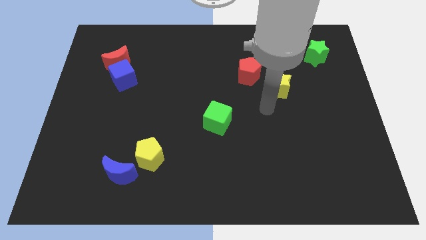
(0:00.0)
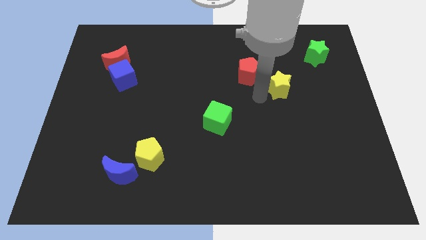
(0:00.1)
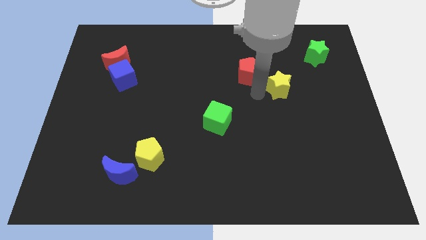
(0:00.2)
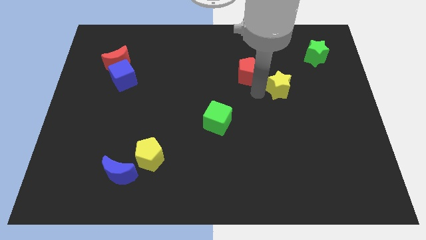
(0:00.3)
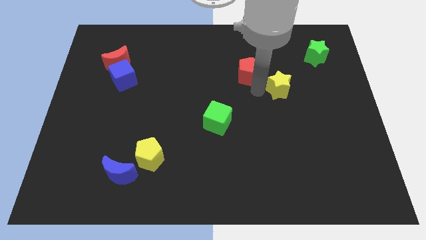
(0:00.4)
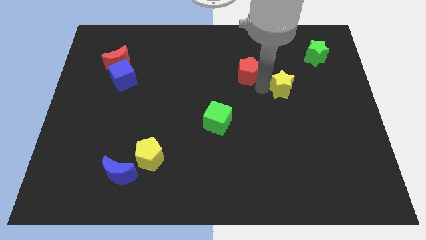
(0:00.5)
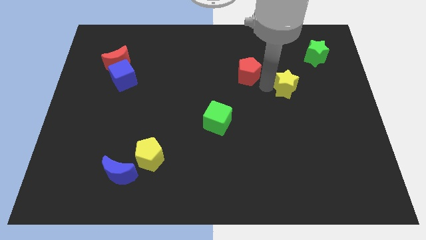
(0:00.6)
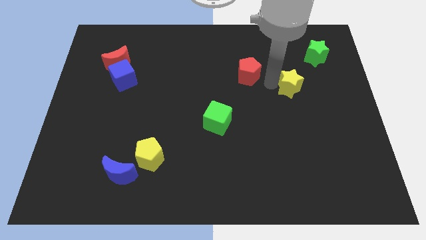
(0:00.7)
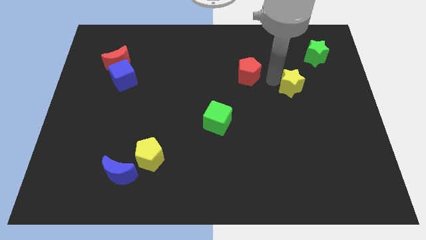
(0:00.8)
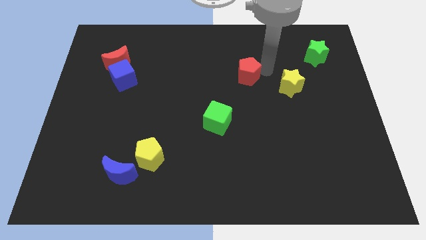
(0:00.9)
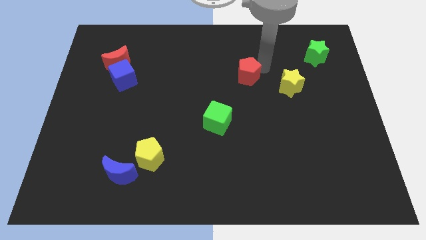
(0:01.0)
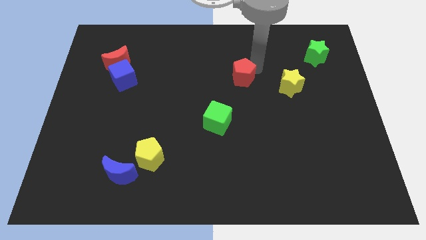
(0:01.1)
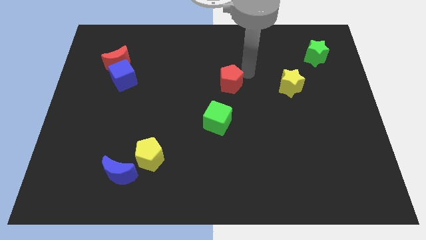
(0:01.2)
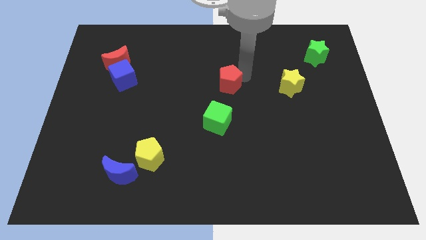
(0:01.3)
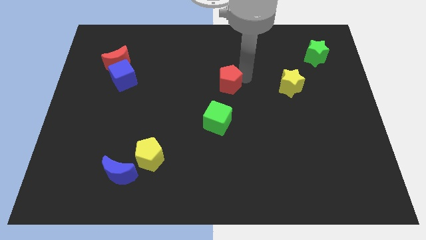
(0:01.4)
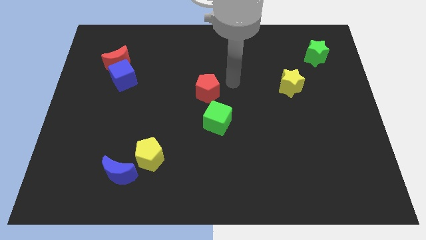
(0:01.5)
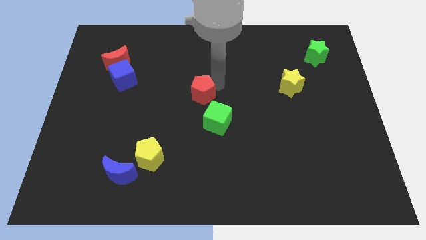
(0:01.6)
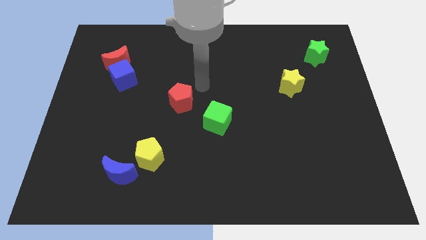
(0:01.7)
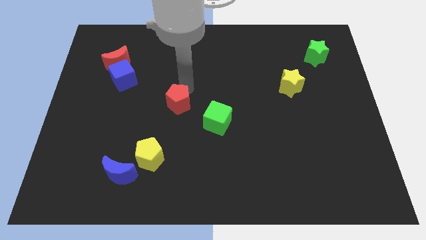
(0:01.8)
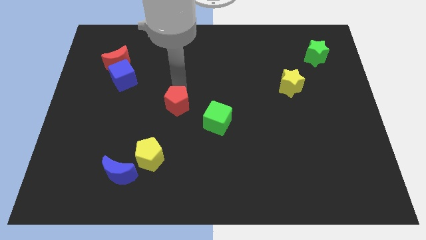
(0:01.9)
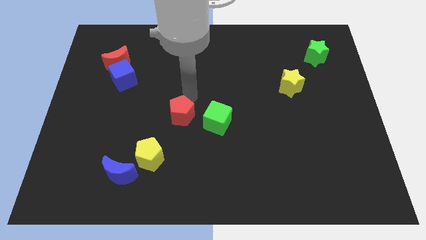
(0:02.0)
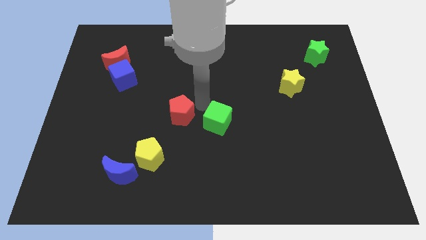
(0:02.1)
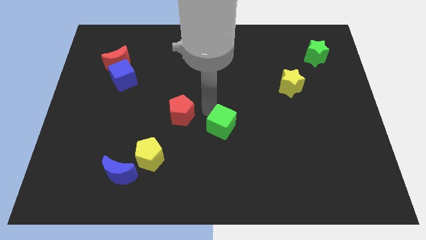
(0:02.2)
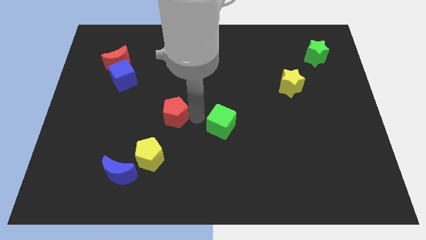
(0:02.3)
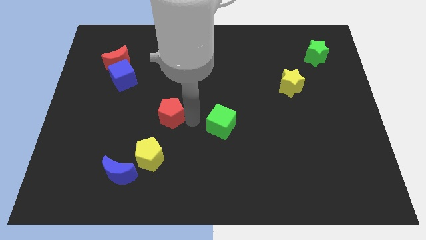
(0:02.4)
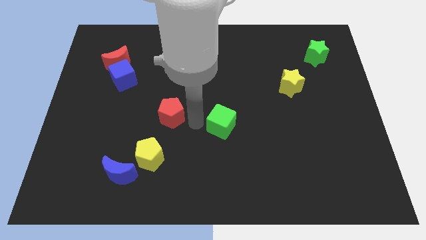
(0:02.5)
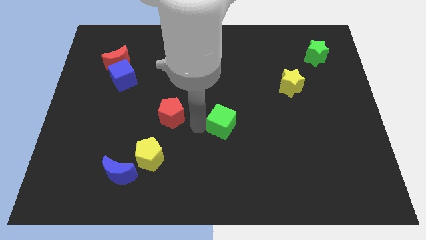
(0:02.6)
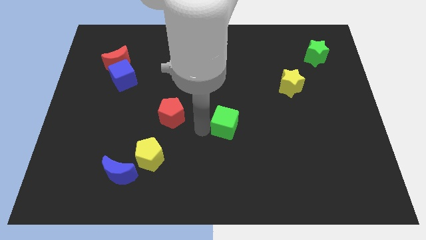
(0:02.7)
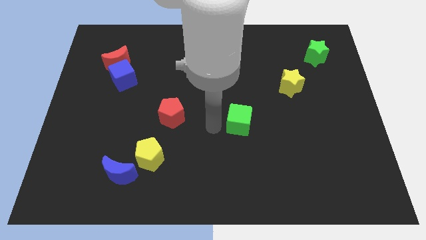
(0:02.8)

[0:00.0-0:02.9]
separate red pentagon and yellow star

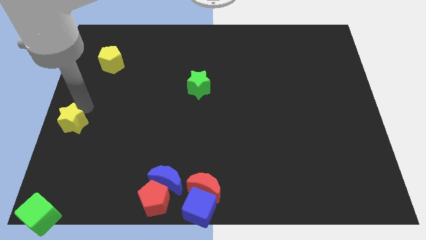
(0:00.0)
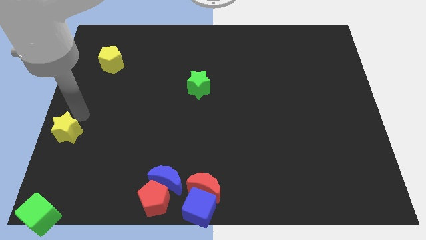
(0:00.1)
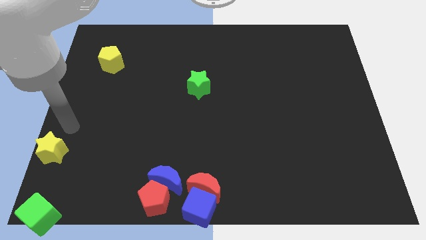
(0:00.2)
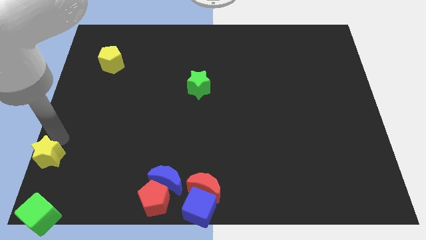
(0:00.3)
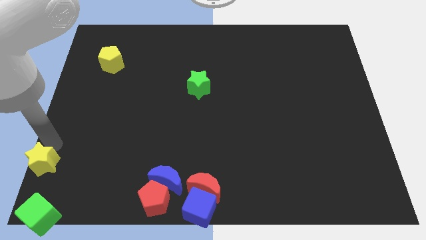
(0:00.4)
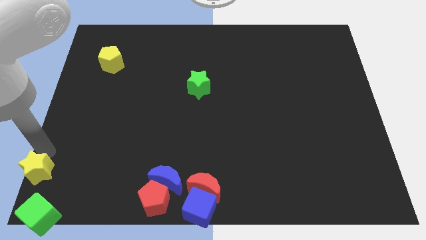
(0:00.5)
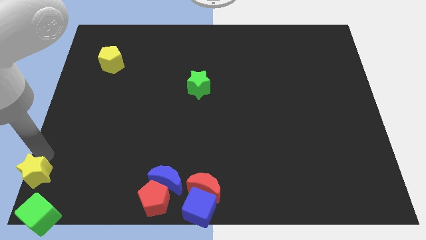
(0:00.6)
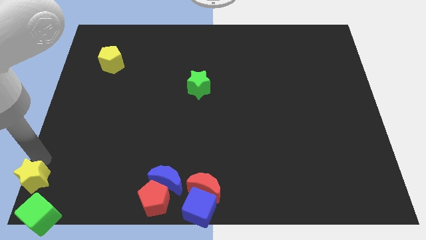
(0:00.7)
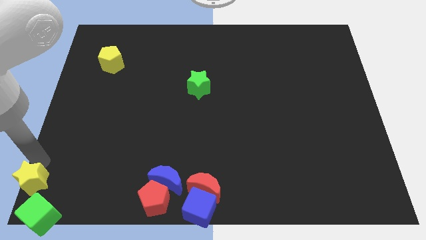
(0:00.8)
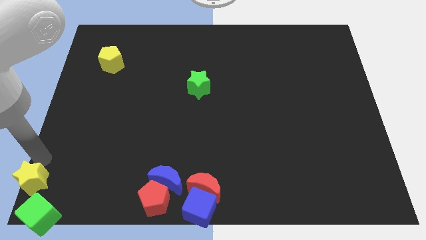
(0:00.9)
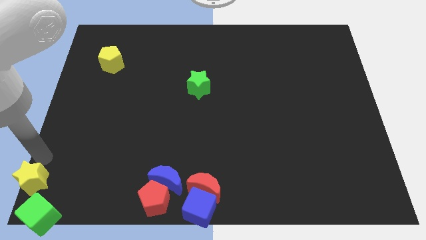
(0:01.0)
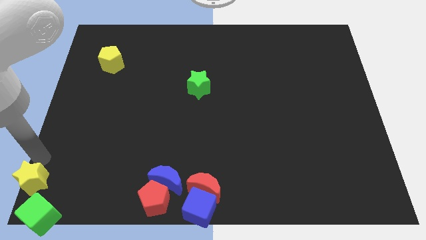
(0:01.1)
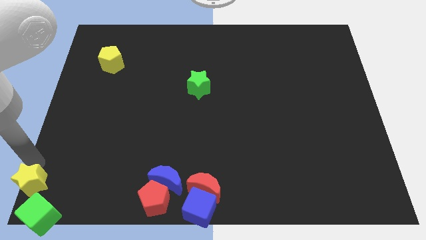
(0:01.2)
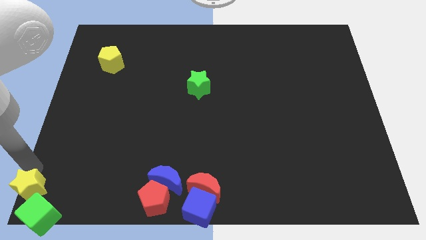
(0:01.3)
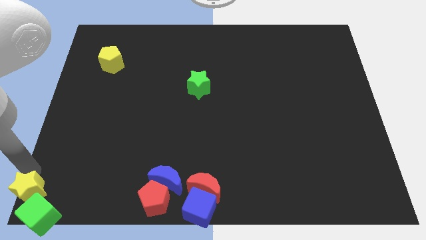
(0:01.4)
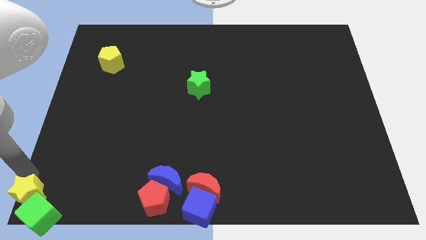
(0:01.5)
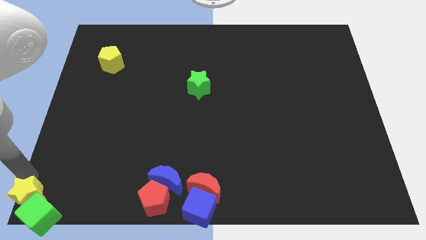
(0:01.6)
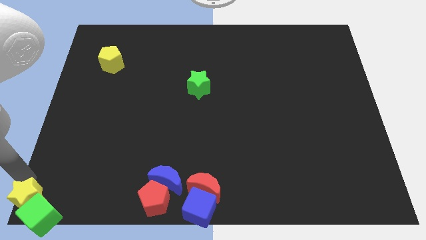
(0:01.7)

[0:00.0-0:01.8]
push the yellow star into the green cube

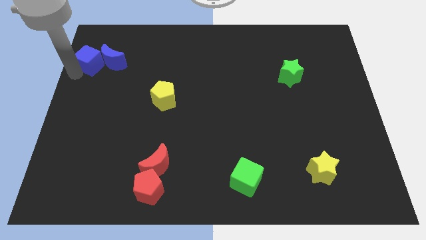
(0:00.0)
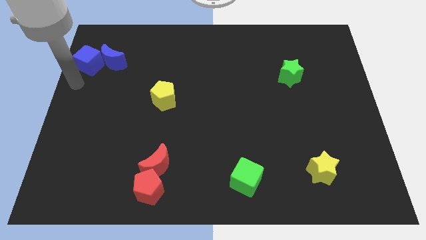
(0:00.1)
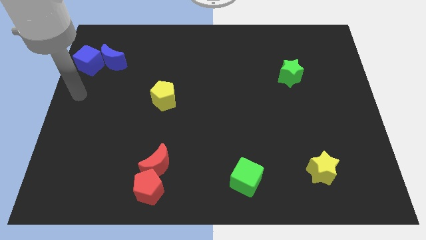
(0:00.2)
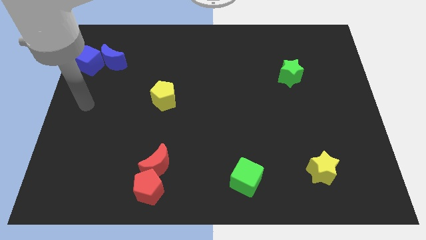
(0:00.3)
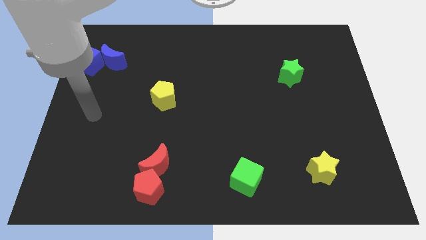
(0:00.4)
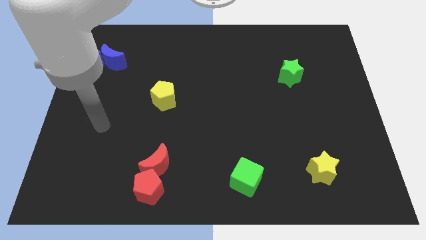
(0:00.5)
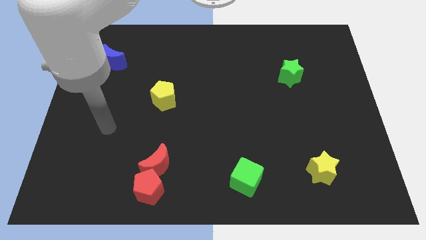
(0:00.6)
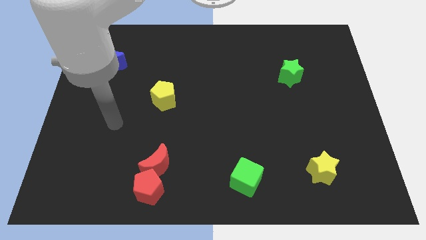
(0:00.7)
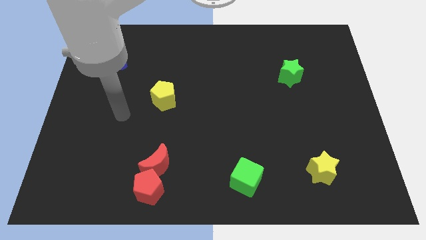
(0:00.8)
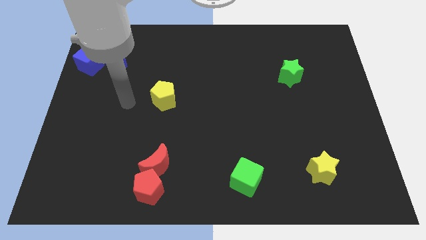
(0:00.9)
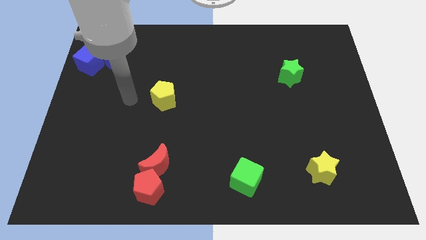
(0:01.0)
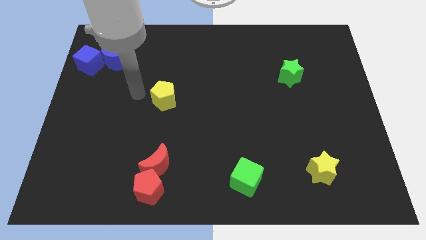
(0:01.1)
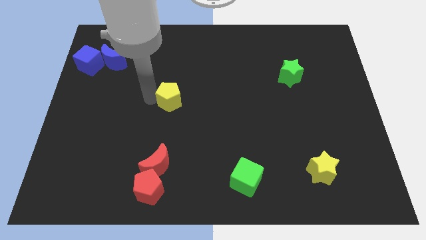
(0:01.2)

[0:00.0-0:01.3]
move your arm at the left side of the yellow pentagon

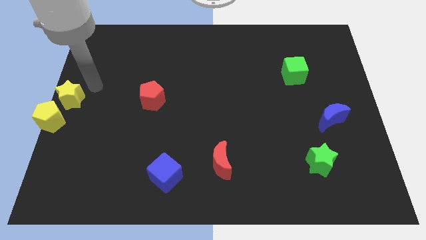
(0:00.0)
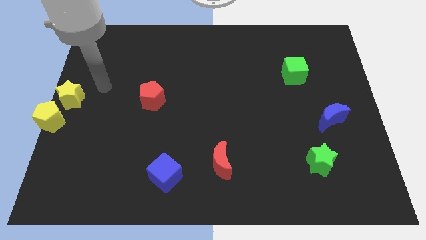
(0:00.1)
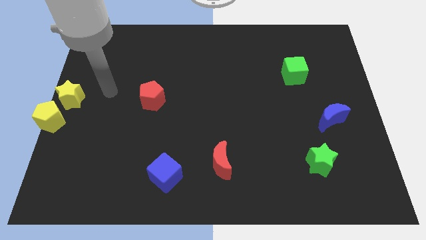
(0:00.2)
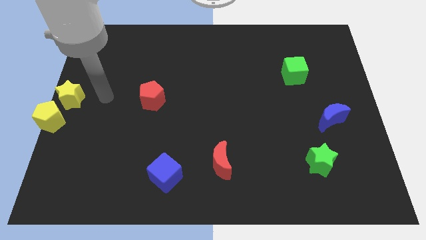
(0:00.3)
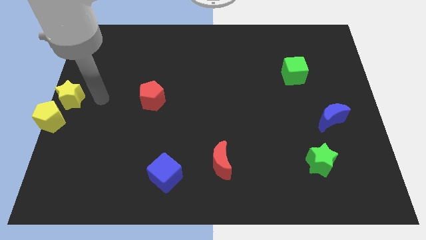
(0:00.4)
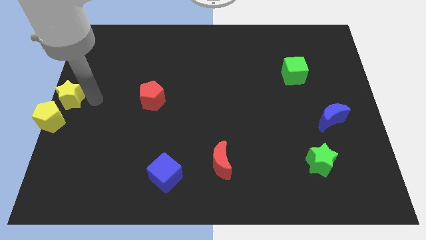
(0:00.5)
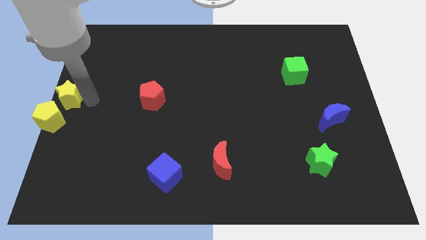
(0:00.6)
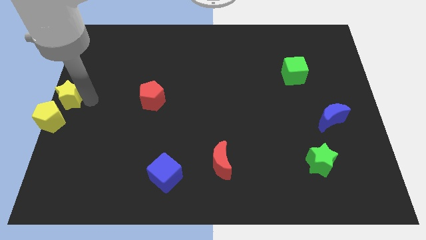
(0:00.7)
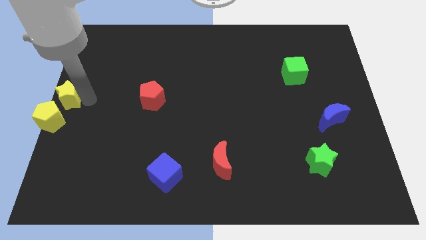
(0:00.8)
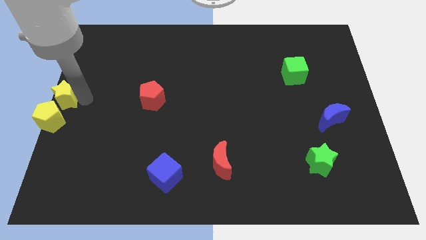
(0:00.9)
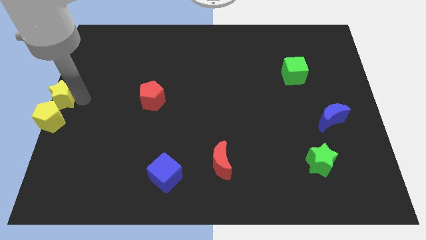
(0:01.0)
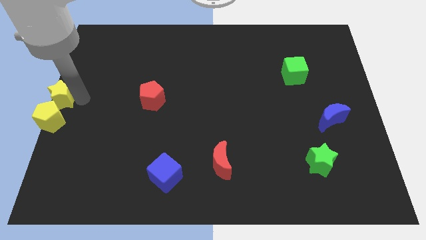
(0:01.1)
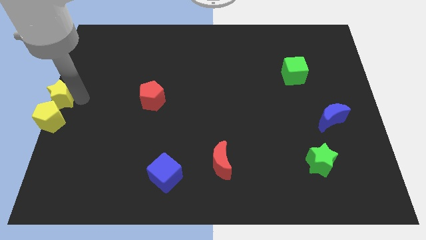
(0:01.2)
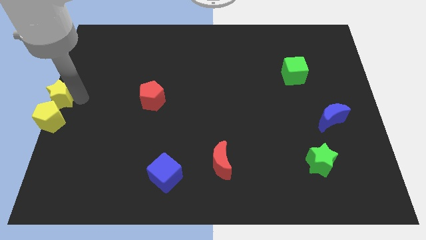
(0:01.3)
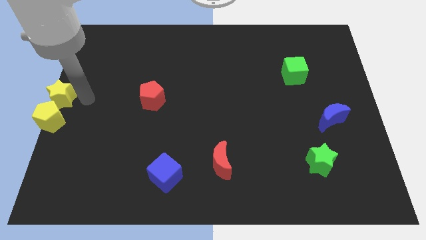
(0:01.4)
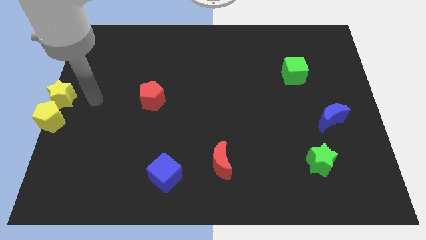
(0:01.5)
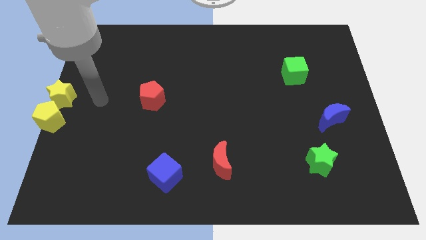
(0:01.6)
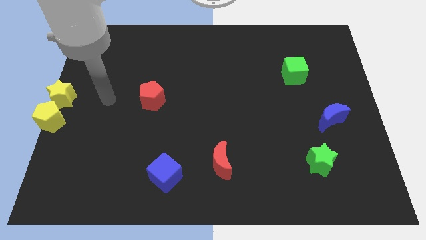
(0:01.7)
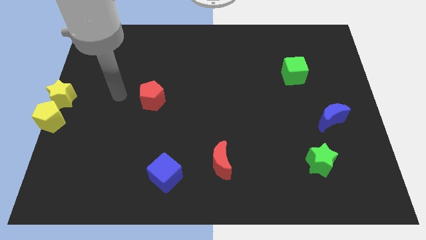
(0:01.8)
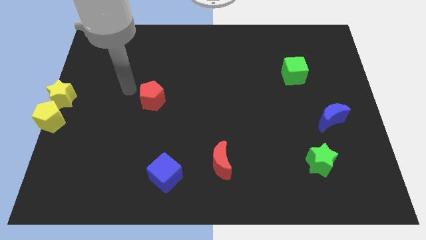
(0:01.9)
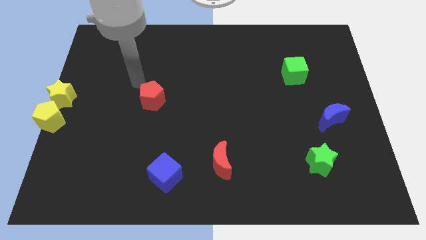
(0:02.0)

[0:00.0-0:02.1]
place the yellow star to the top side of the yellow pentagon

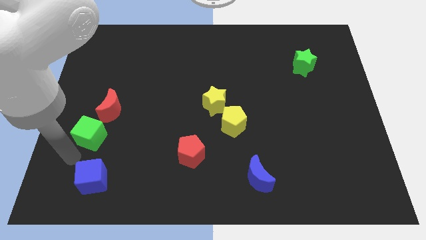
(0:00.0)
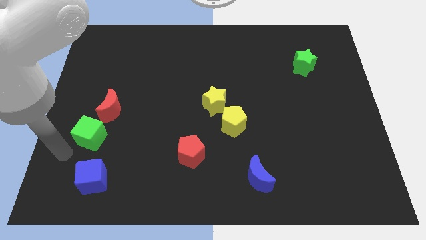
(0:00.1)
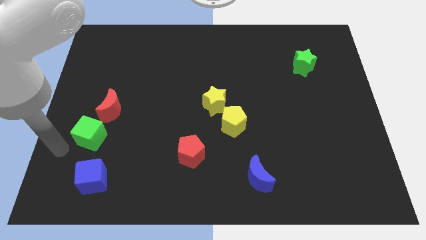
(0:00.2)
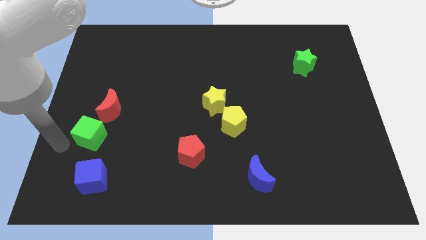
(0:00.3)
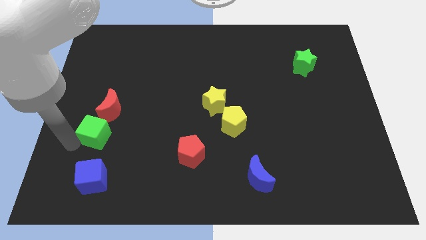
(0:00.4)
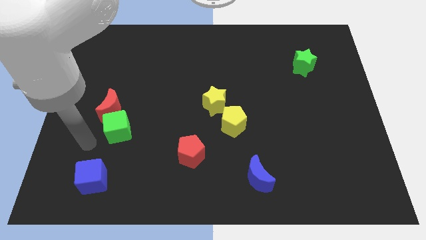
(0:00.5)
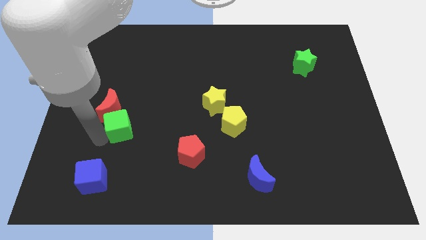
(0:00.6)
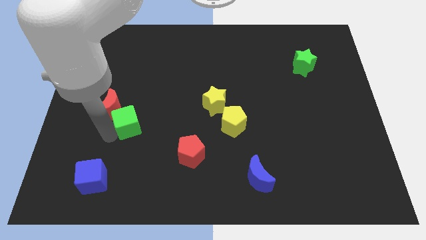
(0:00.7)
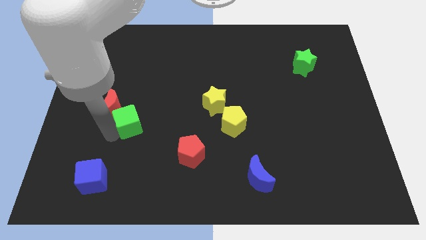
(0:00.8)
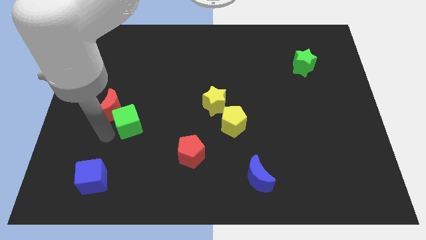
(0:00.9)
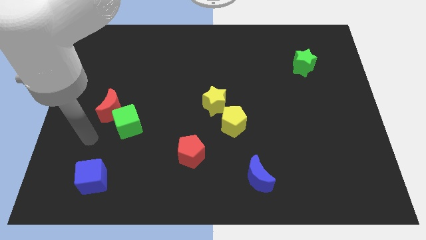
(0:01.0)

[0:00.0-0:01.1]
push the green cube close to red crescent
